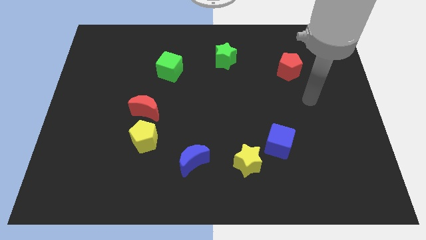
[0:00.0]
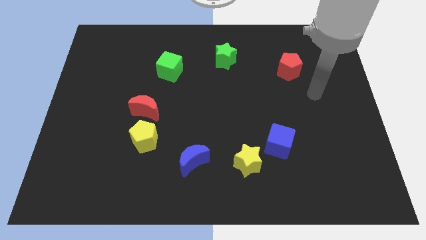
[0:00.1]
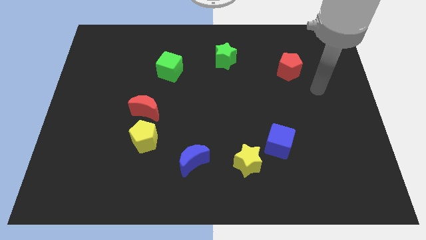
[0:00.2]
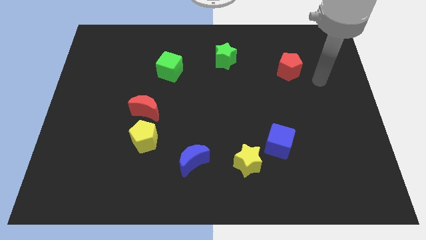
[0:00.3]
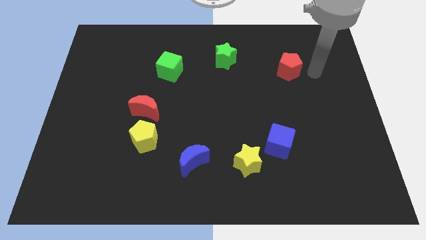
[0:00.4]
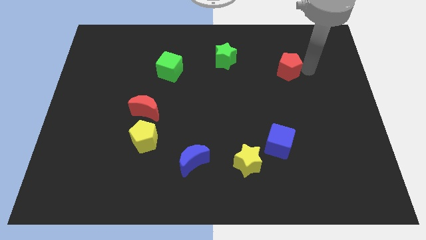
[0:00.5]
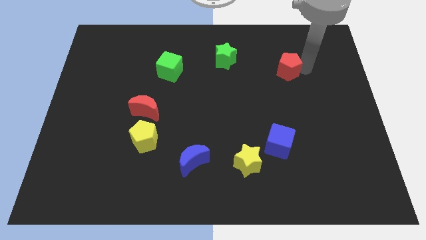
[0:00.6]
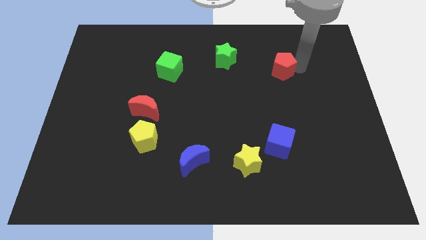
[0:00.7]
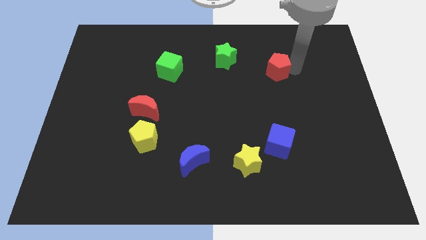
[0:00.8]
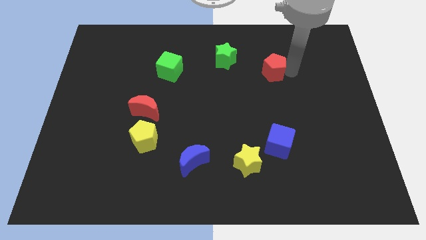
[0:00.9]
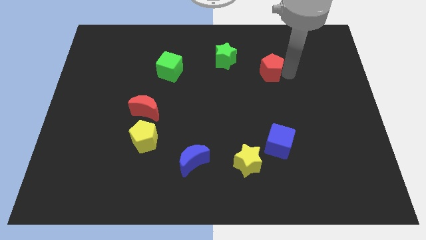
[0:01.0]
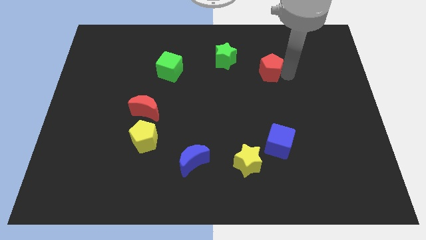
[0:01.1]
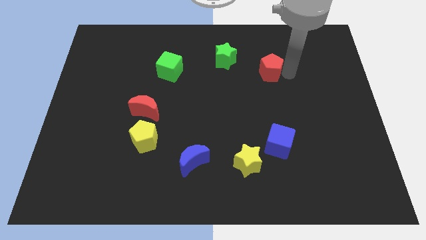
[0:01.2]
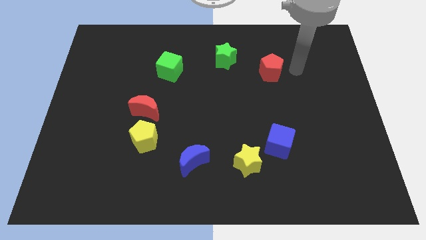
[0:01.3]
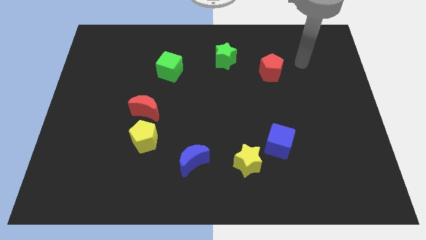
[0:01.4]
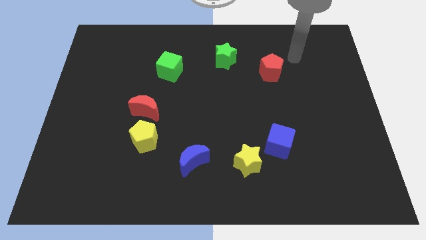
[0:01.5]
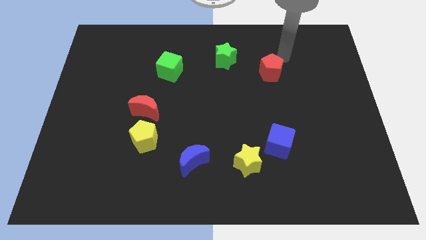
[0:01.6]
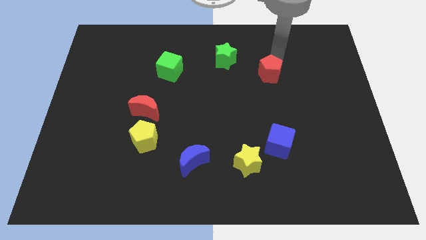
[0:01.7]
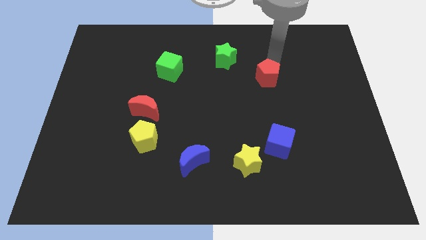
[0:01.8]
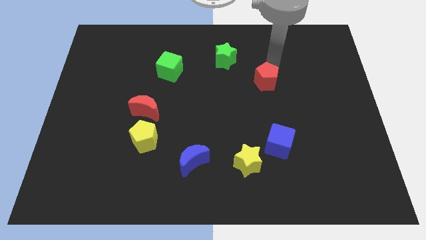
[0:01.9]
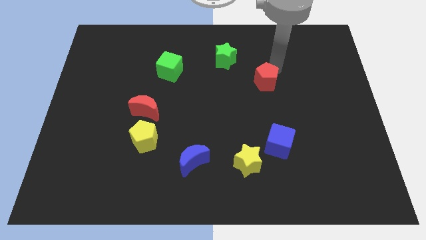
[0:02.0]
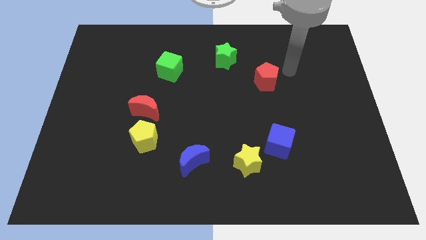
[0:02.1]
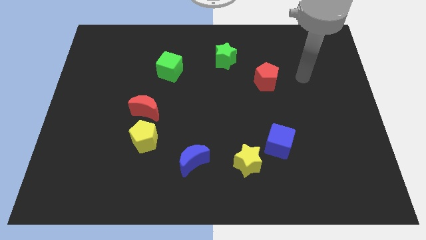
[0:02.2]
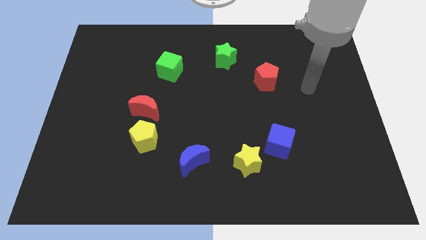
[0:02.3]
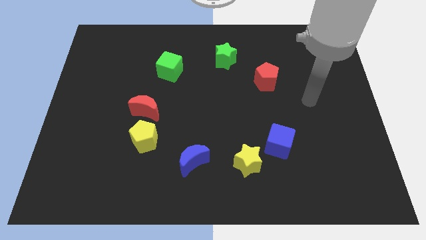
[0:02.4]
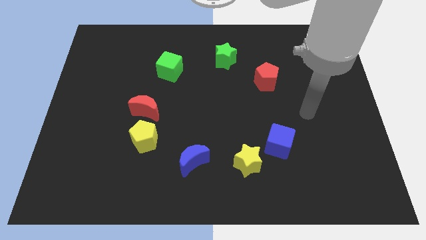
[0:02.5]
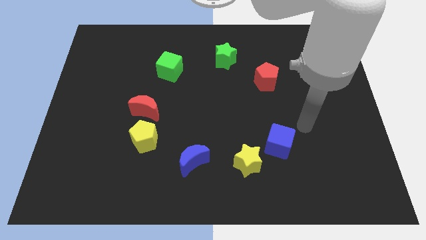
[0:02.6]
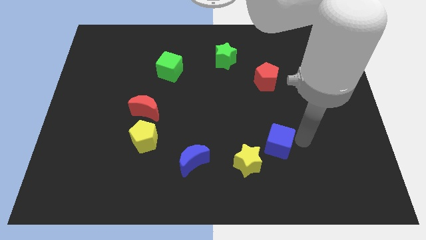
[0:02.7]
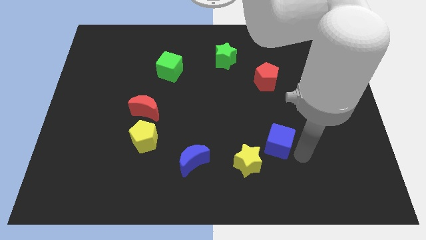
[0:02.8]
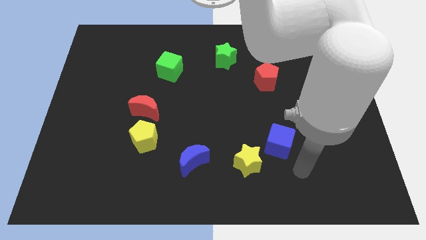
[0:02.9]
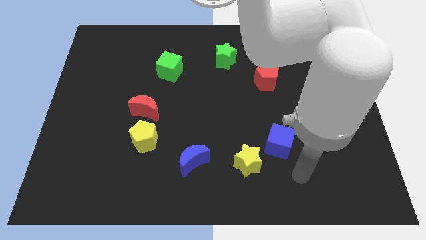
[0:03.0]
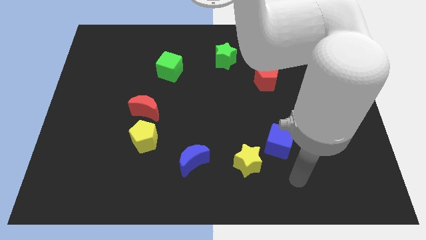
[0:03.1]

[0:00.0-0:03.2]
move the red pentagon diagonal to the bottom right of the green star

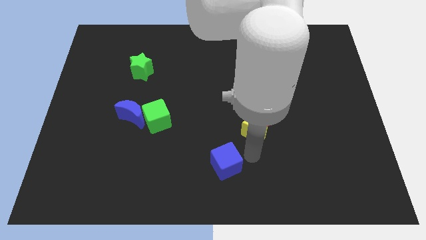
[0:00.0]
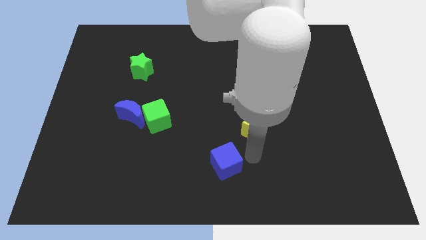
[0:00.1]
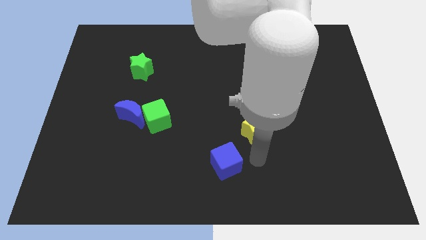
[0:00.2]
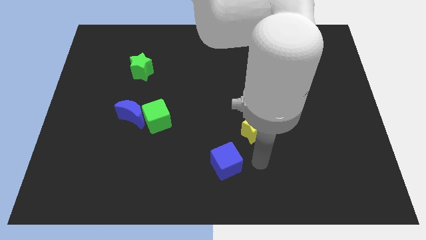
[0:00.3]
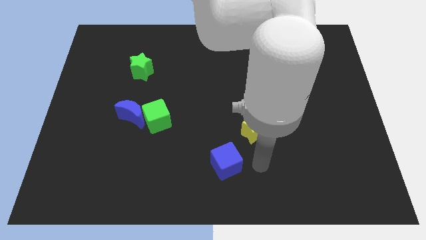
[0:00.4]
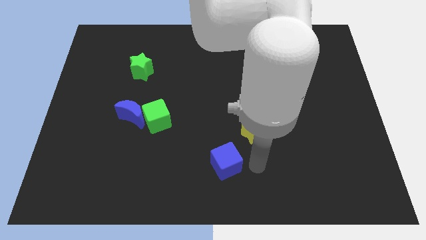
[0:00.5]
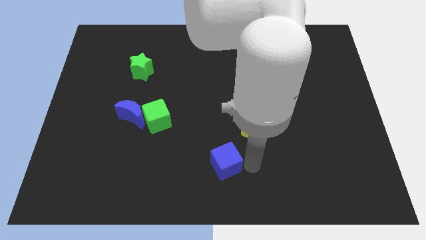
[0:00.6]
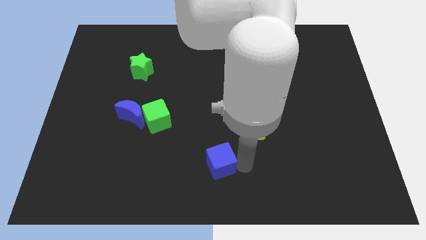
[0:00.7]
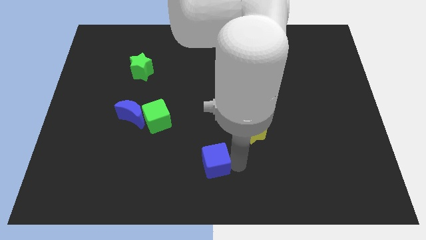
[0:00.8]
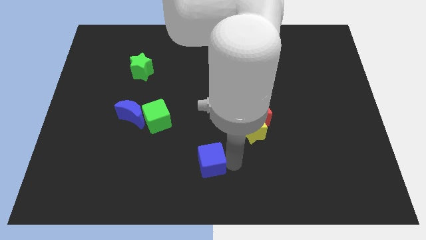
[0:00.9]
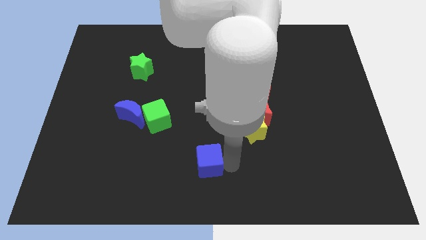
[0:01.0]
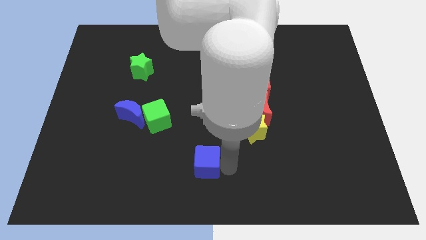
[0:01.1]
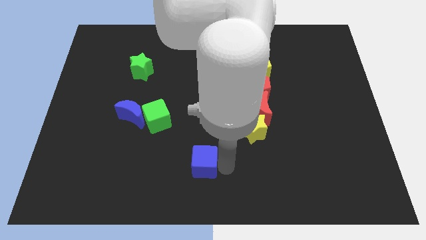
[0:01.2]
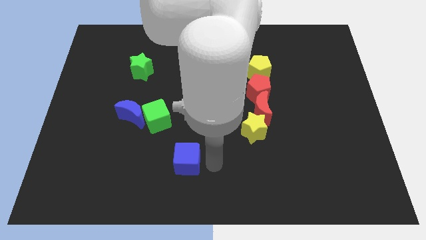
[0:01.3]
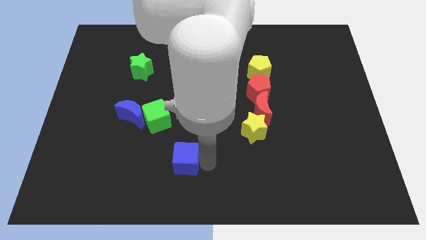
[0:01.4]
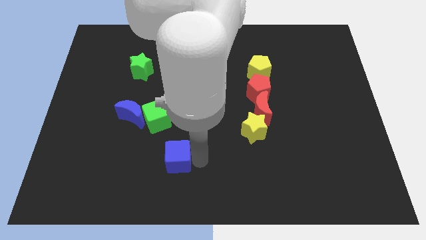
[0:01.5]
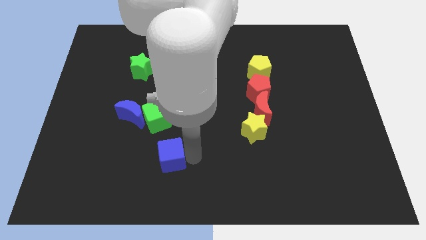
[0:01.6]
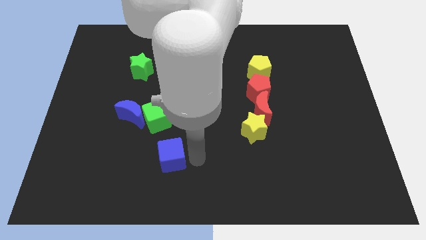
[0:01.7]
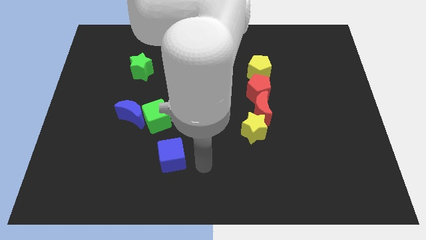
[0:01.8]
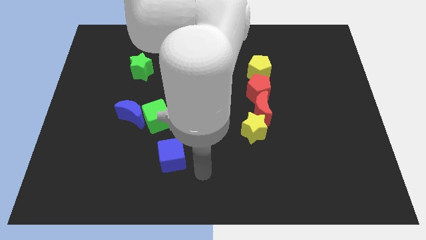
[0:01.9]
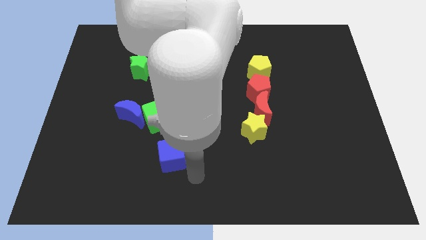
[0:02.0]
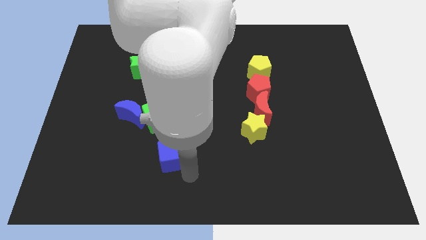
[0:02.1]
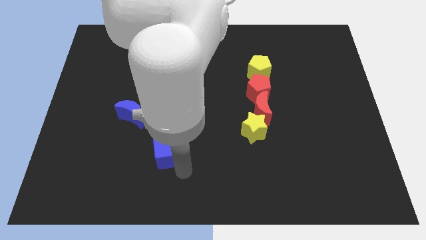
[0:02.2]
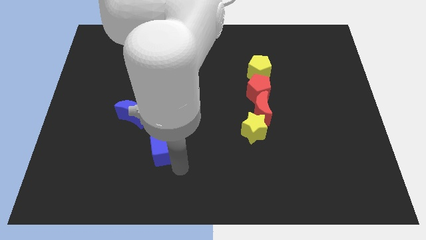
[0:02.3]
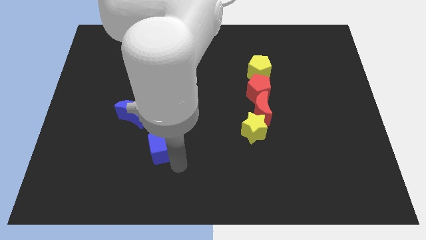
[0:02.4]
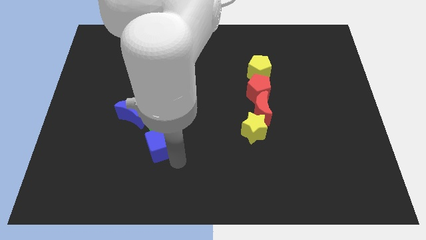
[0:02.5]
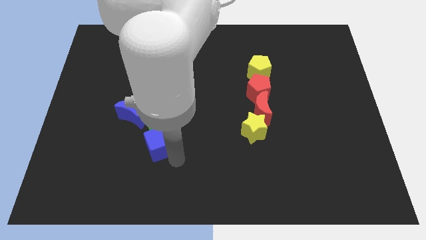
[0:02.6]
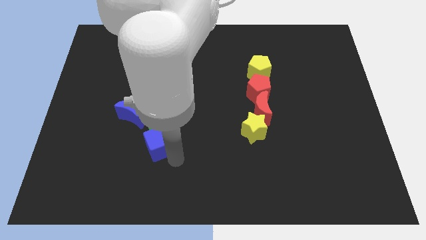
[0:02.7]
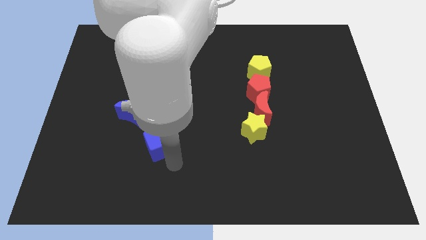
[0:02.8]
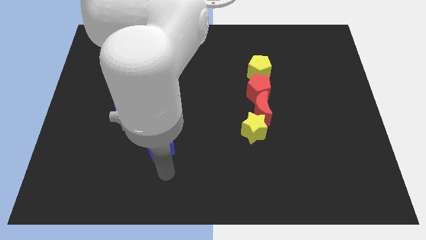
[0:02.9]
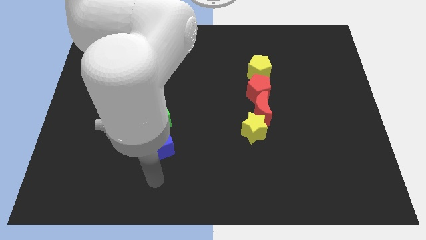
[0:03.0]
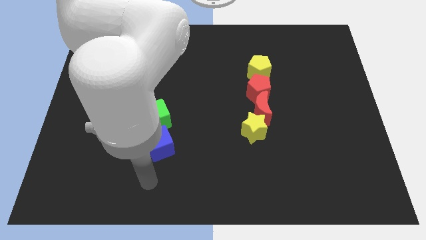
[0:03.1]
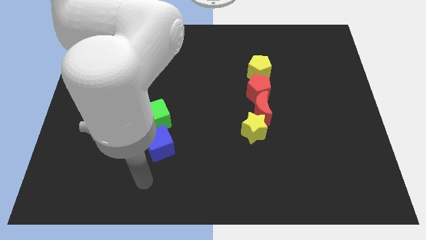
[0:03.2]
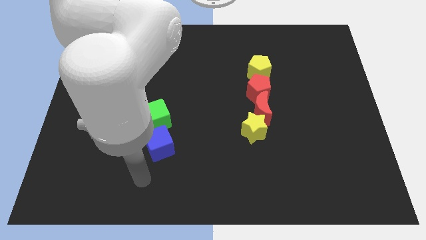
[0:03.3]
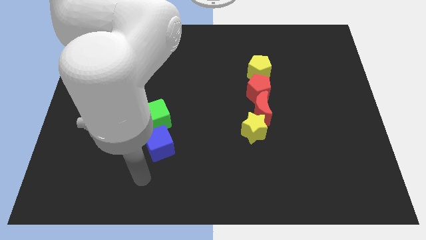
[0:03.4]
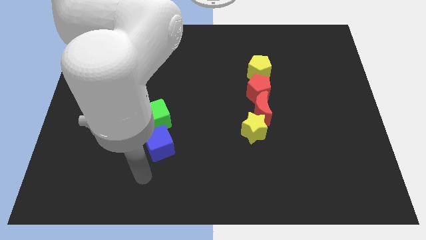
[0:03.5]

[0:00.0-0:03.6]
place the blue cube under the green cube

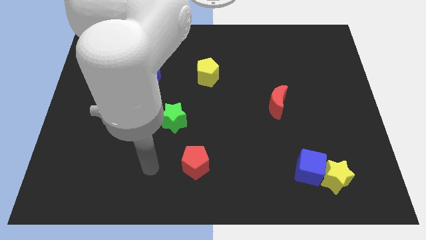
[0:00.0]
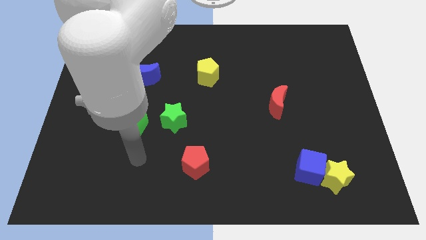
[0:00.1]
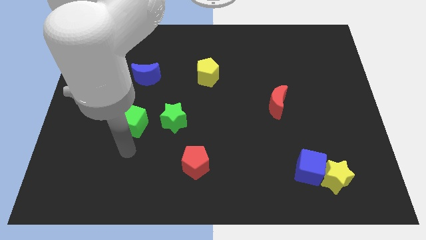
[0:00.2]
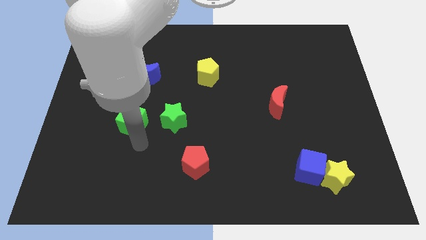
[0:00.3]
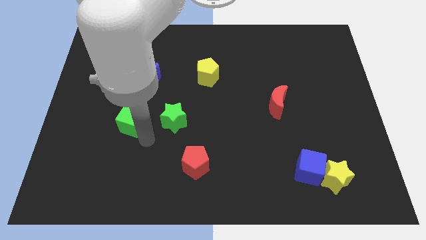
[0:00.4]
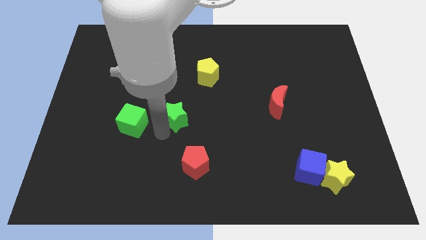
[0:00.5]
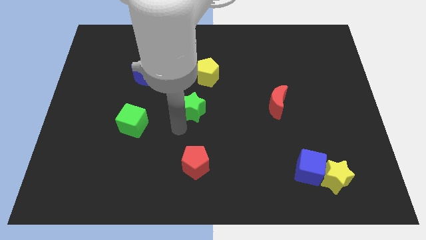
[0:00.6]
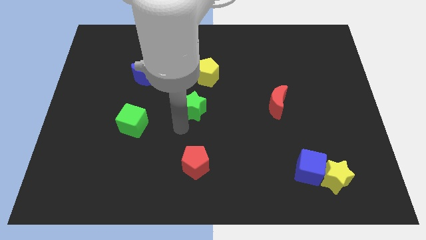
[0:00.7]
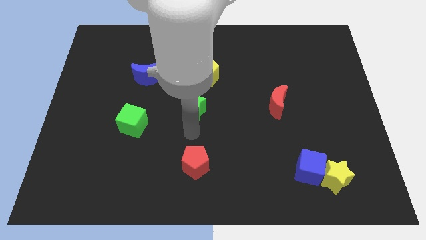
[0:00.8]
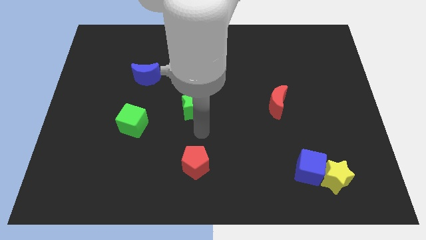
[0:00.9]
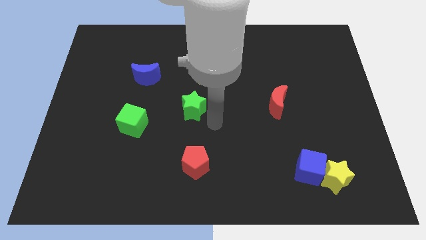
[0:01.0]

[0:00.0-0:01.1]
move your arm close to the green star

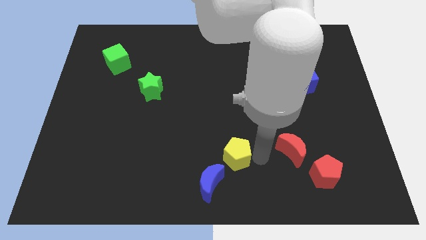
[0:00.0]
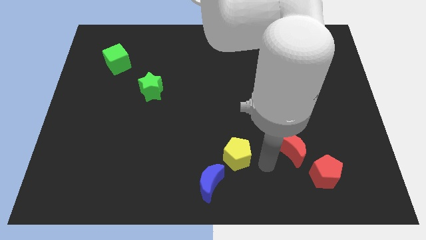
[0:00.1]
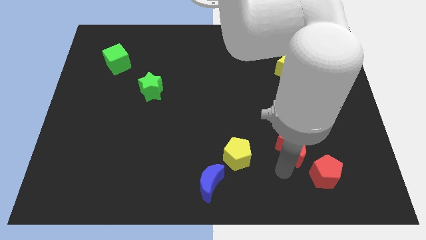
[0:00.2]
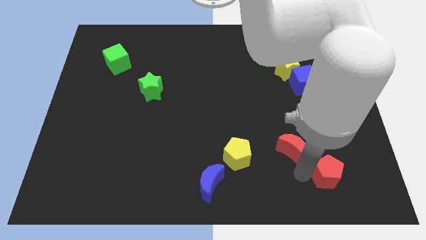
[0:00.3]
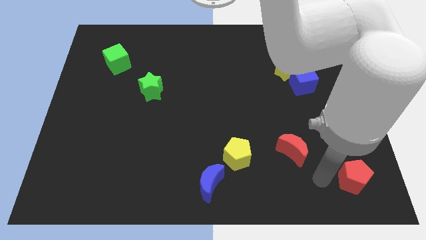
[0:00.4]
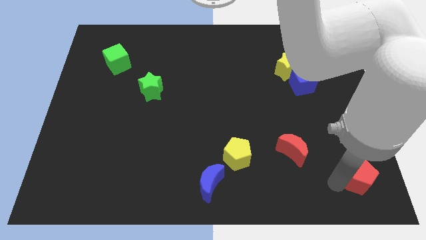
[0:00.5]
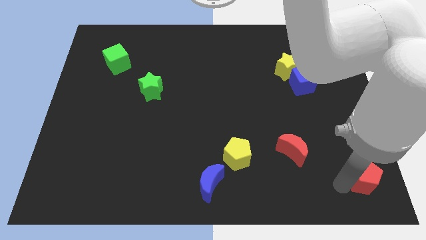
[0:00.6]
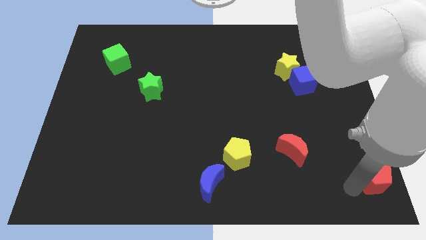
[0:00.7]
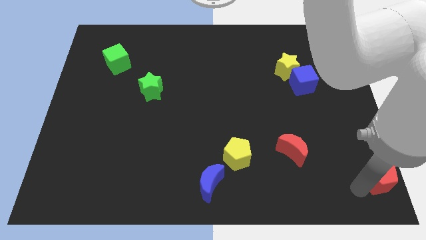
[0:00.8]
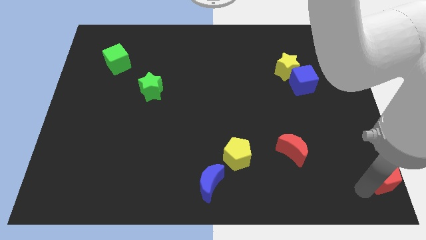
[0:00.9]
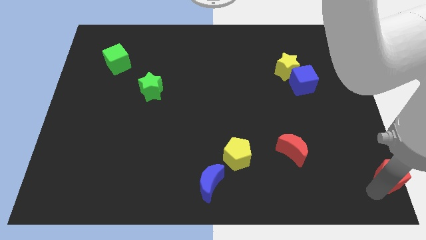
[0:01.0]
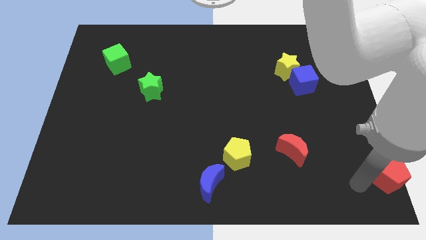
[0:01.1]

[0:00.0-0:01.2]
place red pentagon towards bottom right corner
